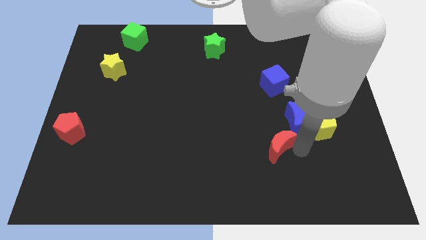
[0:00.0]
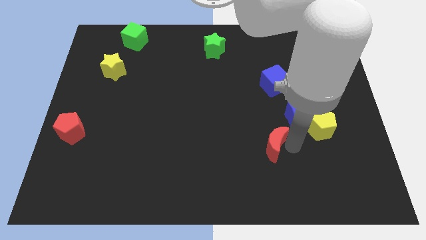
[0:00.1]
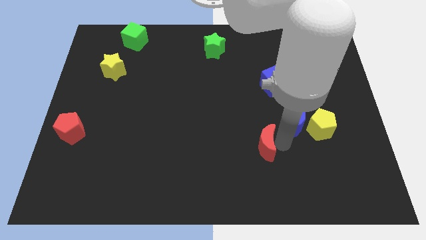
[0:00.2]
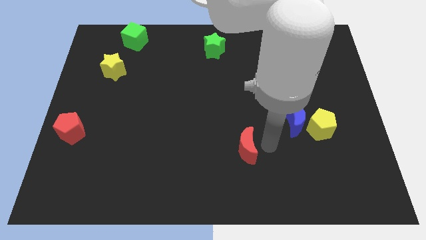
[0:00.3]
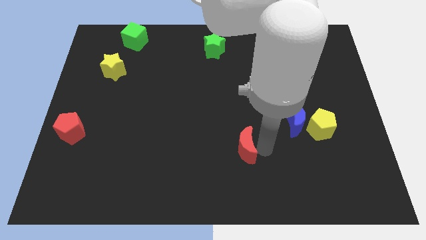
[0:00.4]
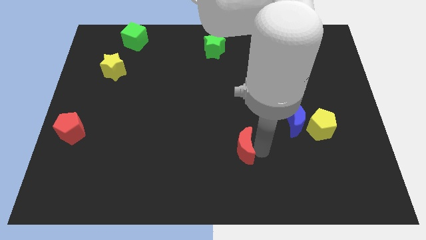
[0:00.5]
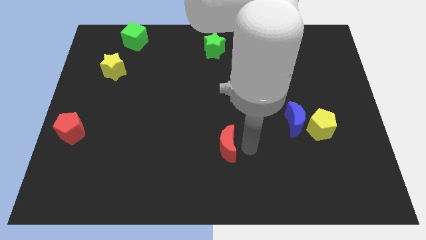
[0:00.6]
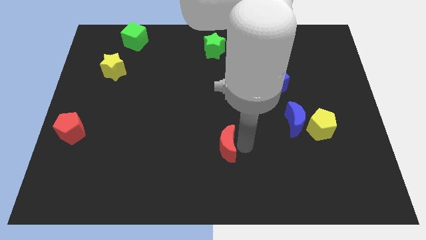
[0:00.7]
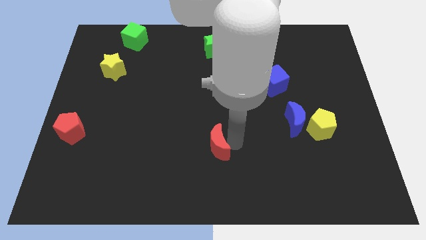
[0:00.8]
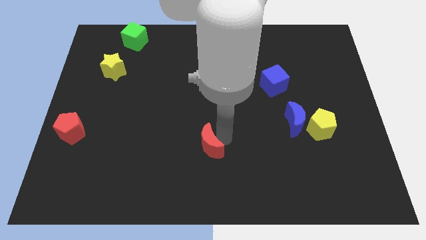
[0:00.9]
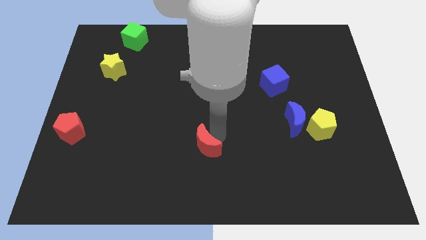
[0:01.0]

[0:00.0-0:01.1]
separate red moon from blue moon

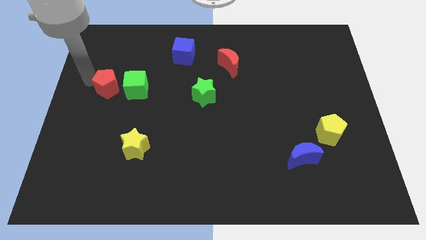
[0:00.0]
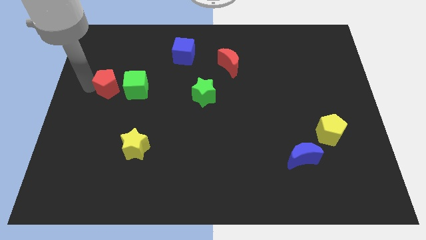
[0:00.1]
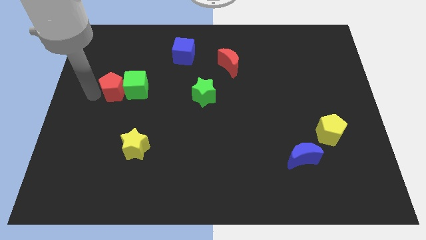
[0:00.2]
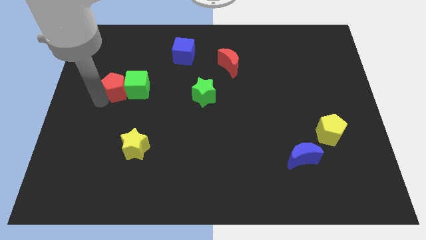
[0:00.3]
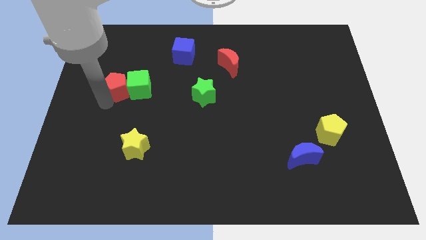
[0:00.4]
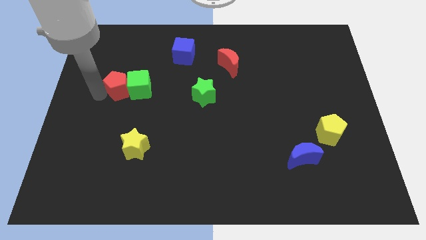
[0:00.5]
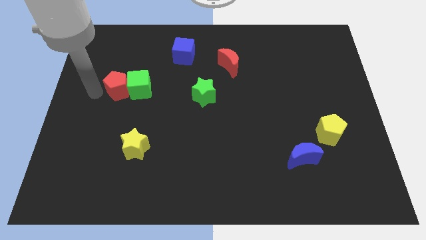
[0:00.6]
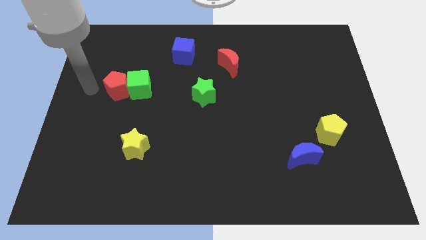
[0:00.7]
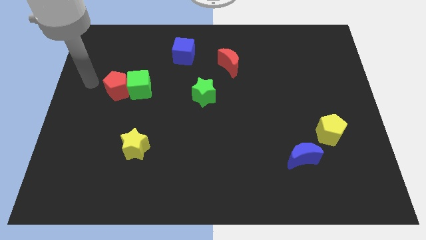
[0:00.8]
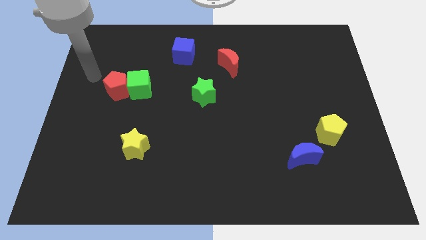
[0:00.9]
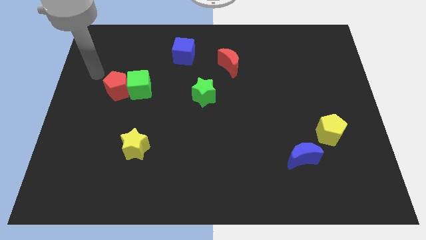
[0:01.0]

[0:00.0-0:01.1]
push the red pentagon into the green cube

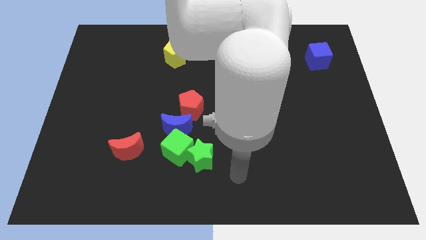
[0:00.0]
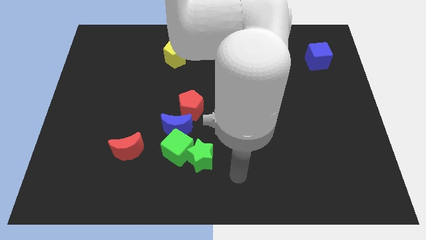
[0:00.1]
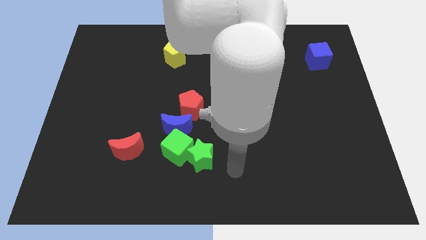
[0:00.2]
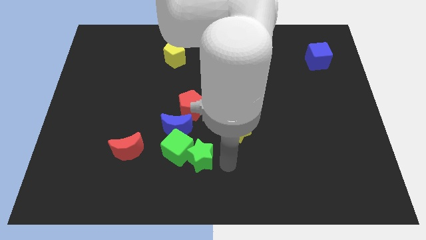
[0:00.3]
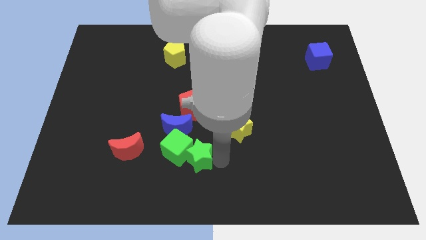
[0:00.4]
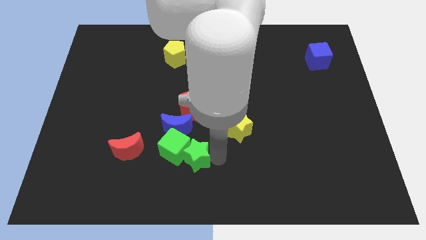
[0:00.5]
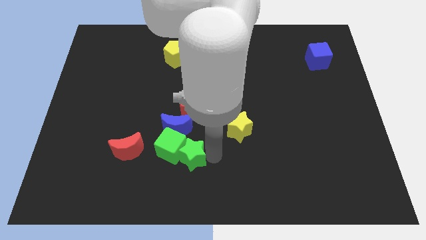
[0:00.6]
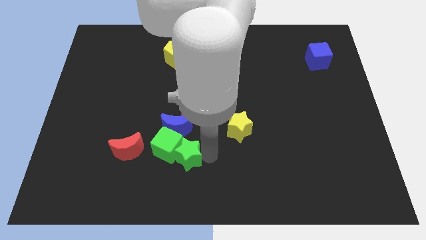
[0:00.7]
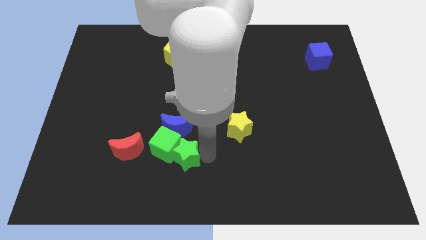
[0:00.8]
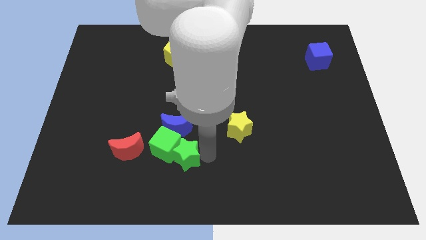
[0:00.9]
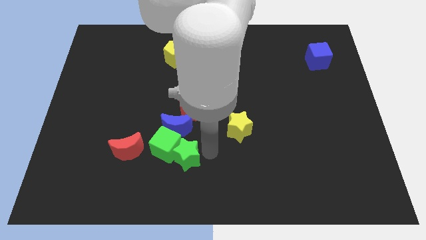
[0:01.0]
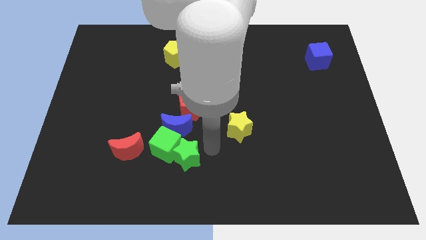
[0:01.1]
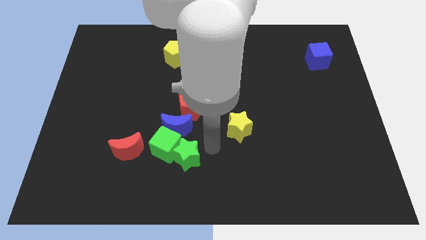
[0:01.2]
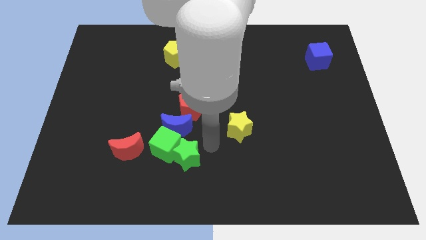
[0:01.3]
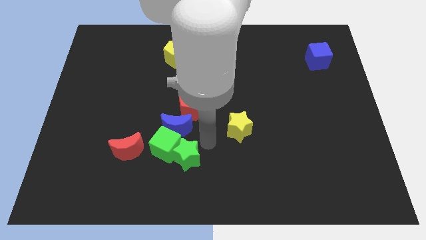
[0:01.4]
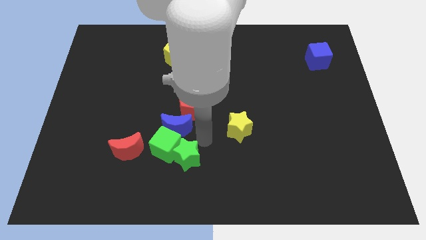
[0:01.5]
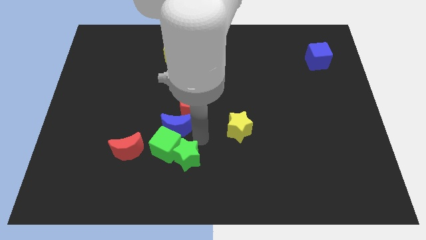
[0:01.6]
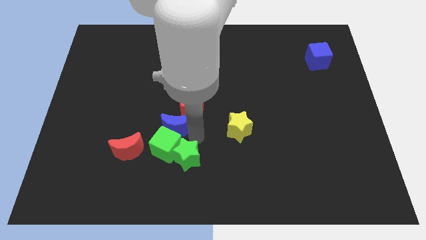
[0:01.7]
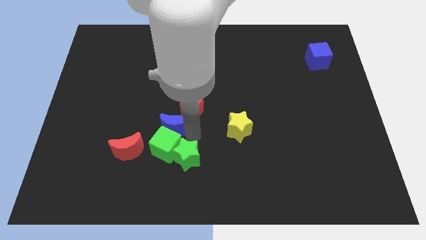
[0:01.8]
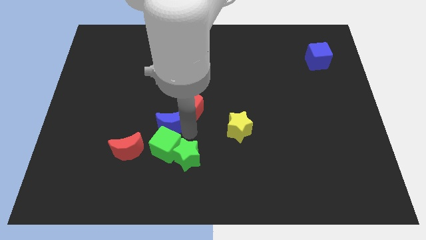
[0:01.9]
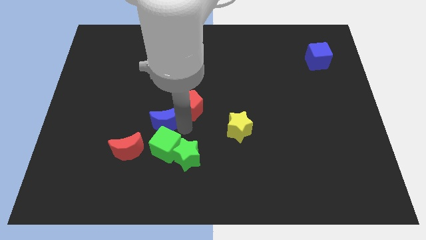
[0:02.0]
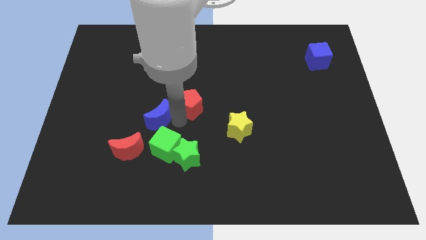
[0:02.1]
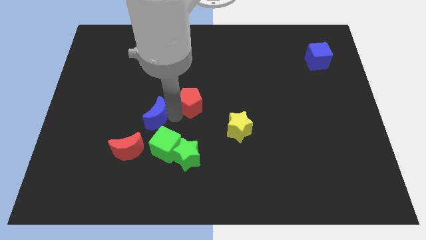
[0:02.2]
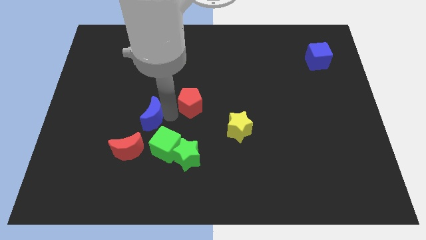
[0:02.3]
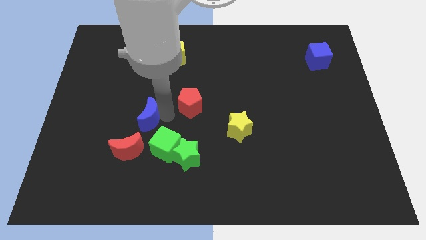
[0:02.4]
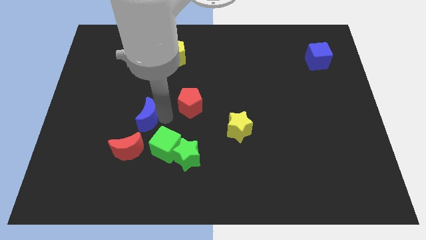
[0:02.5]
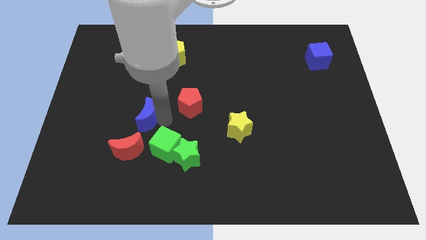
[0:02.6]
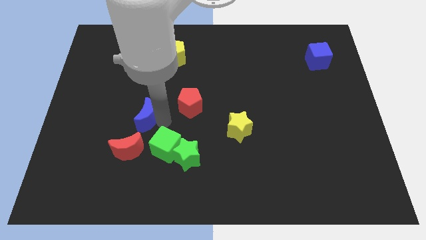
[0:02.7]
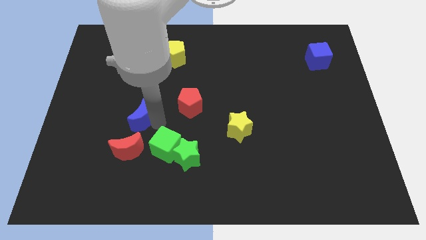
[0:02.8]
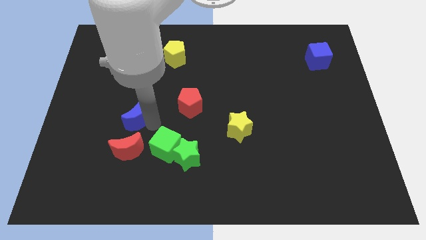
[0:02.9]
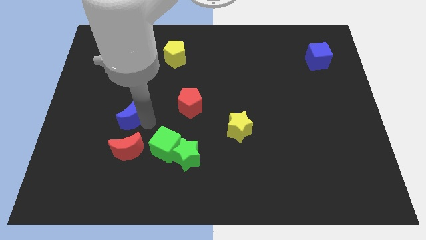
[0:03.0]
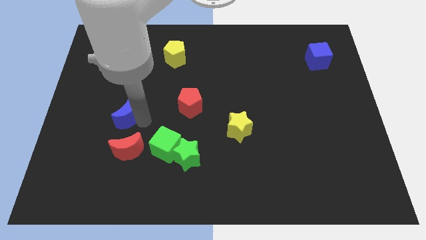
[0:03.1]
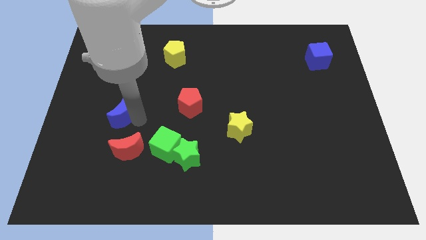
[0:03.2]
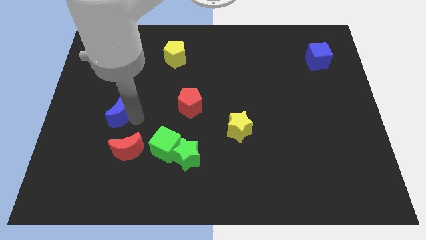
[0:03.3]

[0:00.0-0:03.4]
push blue crescent to the top of red crescent

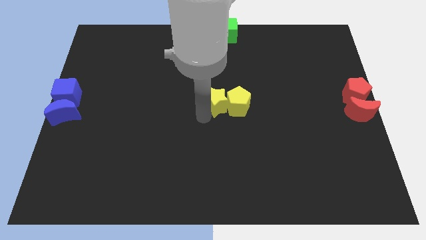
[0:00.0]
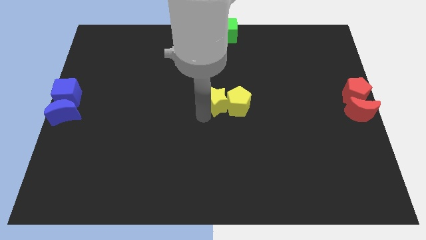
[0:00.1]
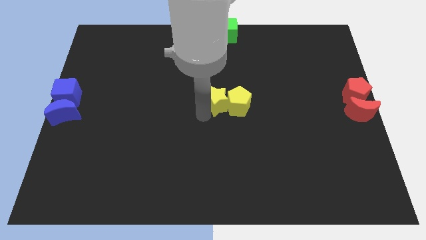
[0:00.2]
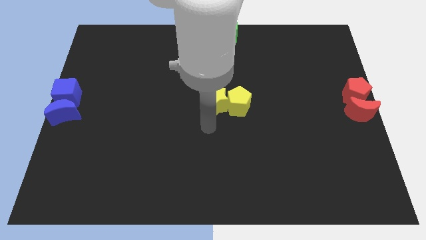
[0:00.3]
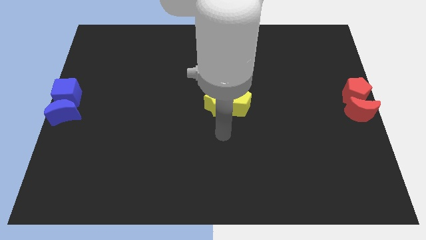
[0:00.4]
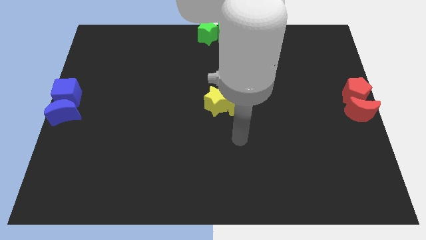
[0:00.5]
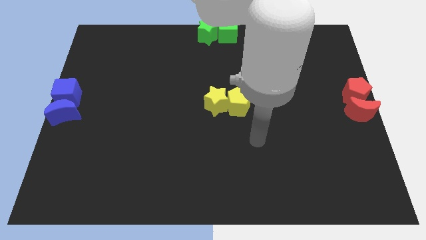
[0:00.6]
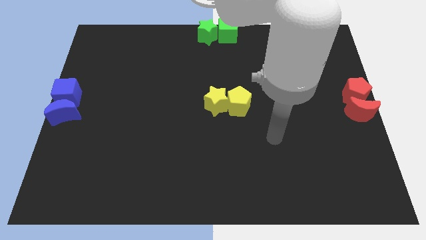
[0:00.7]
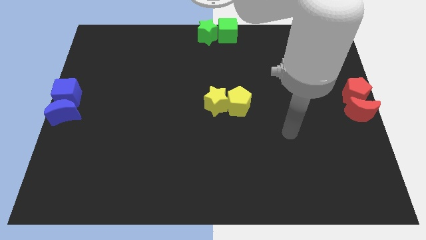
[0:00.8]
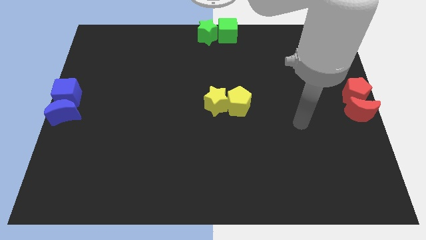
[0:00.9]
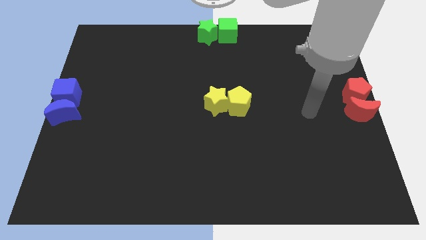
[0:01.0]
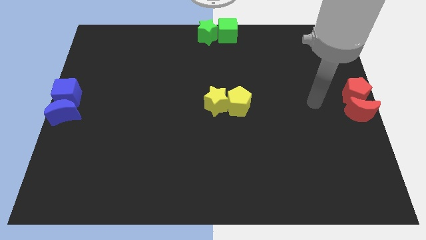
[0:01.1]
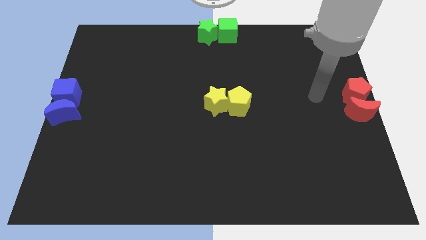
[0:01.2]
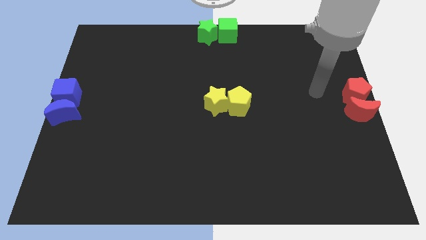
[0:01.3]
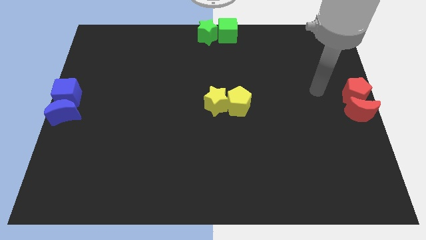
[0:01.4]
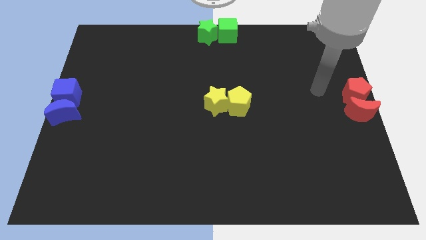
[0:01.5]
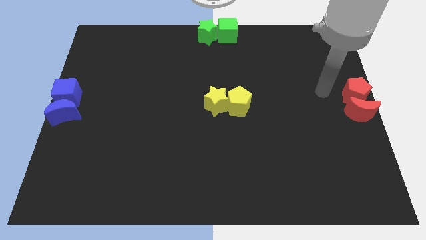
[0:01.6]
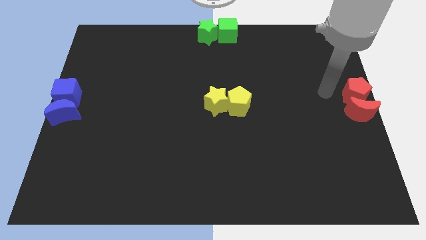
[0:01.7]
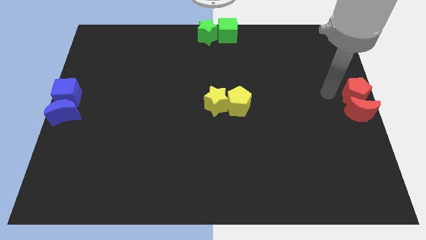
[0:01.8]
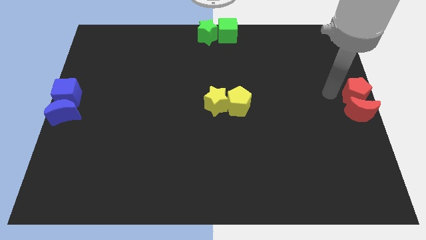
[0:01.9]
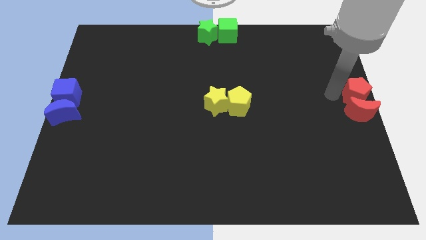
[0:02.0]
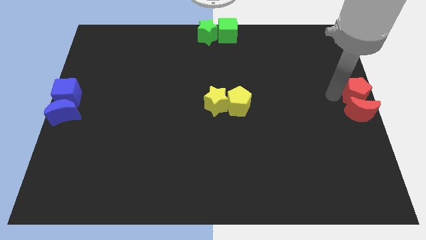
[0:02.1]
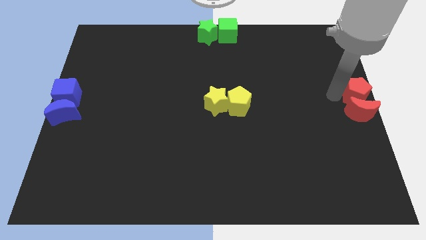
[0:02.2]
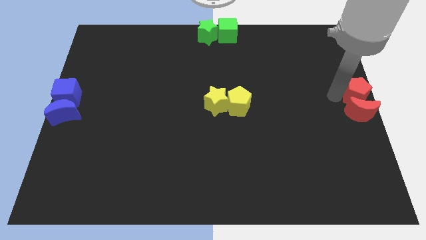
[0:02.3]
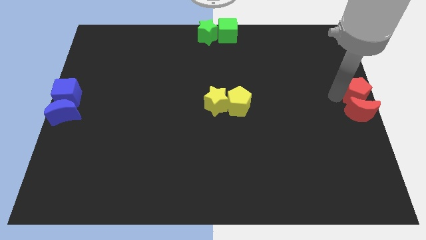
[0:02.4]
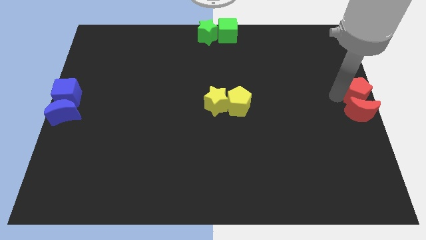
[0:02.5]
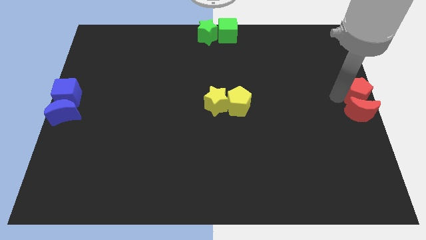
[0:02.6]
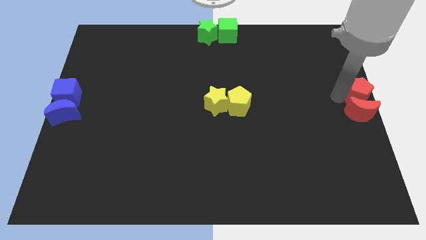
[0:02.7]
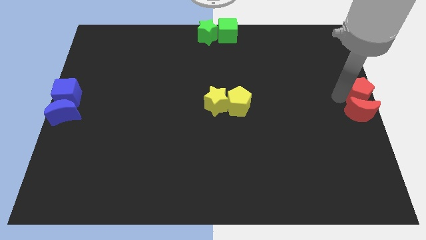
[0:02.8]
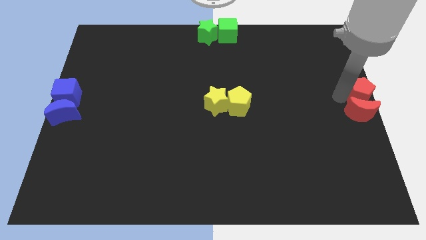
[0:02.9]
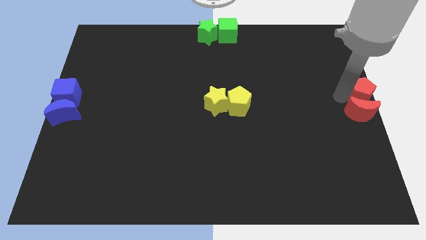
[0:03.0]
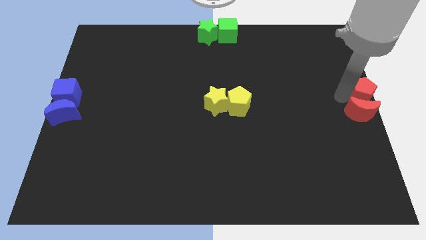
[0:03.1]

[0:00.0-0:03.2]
tap the red pentagon
